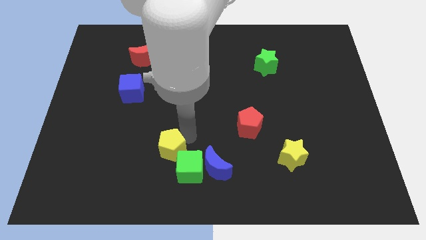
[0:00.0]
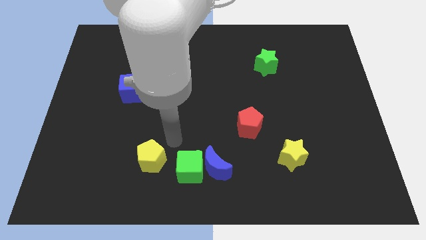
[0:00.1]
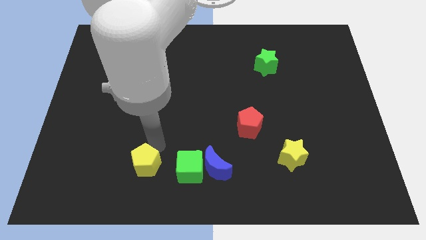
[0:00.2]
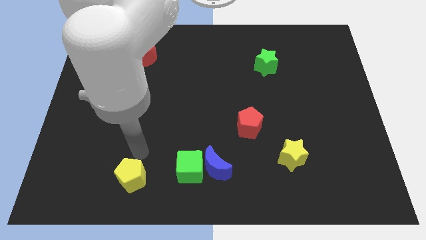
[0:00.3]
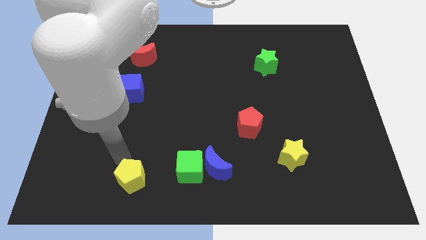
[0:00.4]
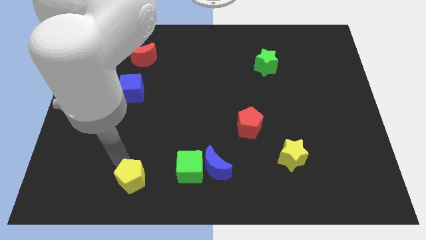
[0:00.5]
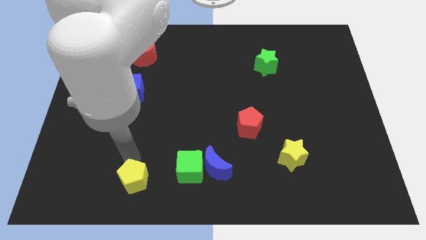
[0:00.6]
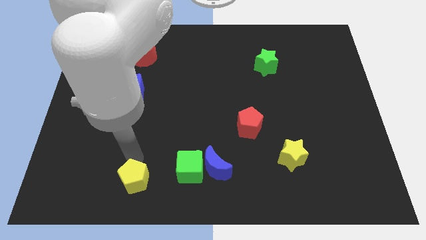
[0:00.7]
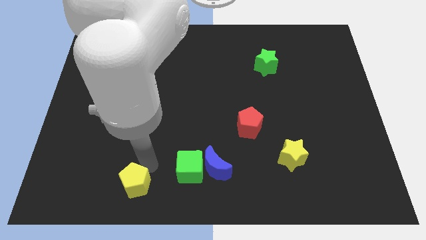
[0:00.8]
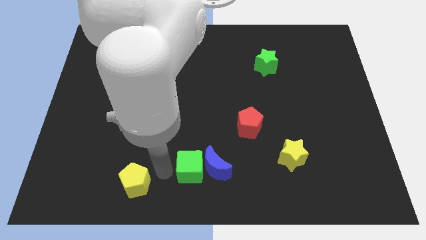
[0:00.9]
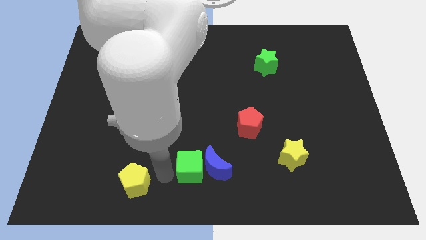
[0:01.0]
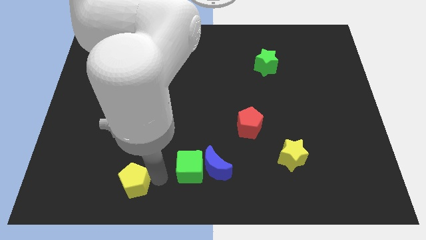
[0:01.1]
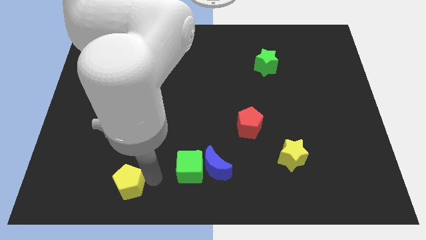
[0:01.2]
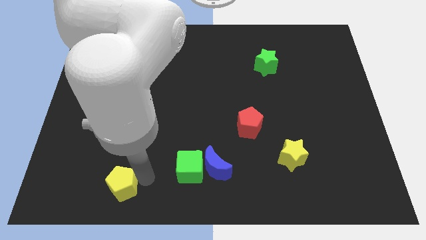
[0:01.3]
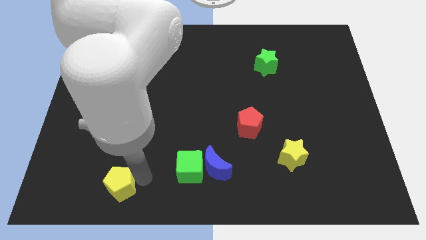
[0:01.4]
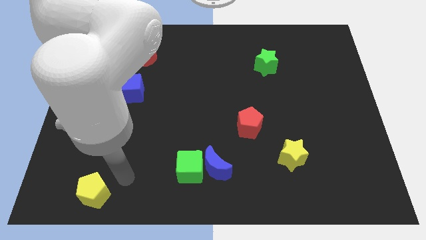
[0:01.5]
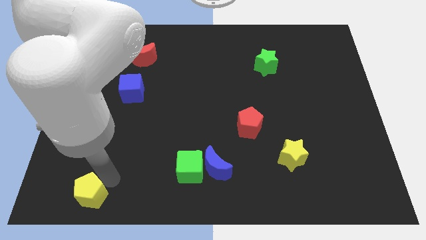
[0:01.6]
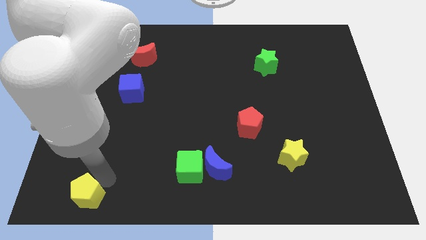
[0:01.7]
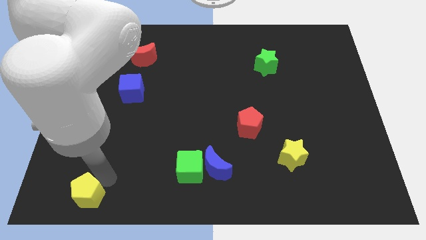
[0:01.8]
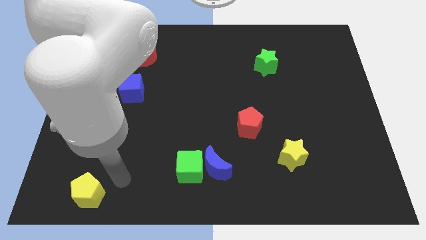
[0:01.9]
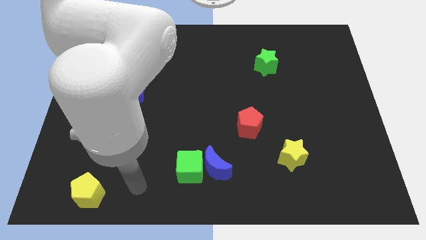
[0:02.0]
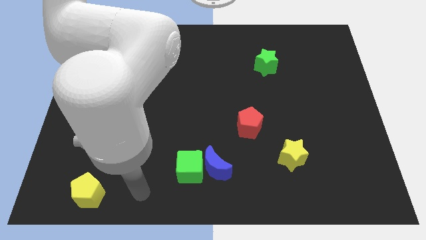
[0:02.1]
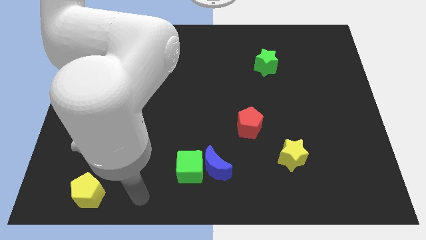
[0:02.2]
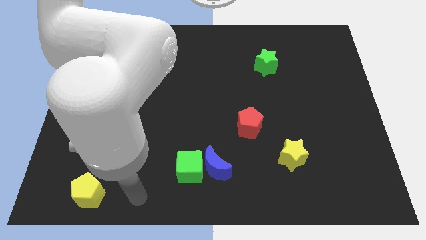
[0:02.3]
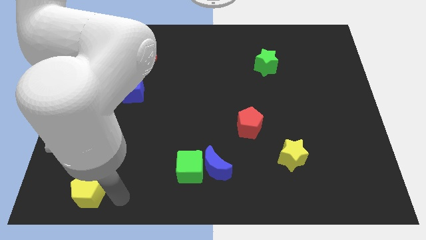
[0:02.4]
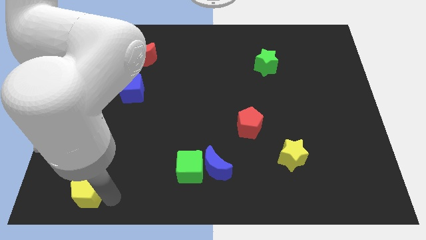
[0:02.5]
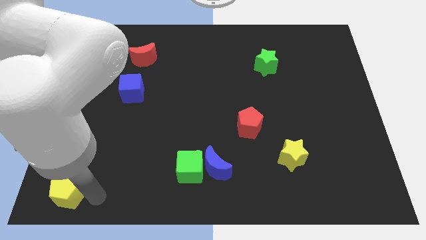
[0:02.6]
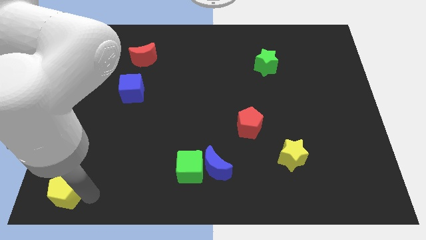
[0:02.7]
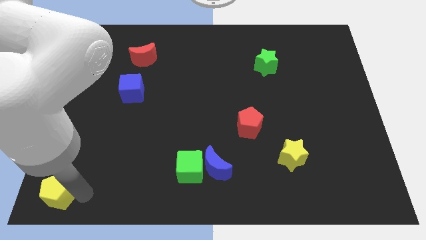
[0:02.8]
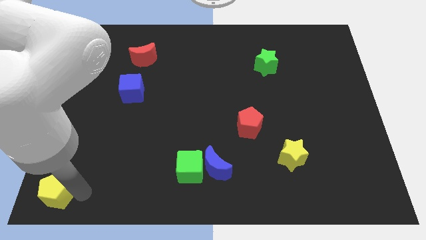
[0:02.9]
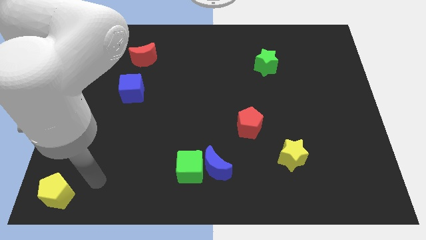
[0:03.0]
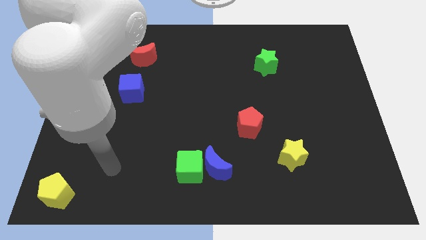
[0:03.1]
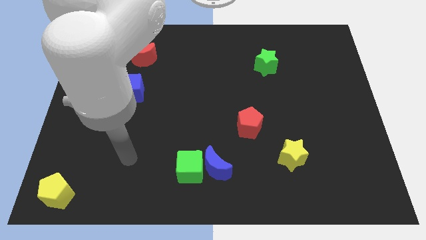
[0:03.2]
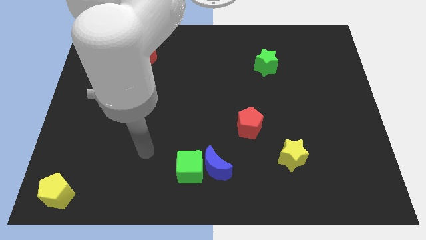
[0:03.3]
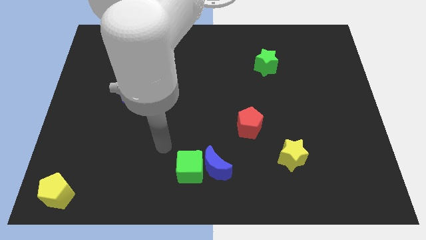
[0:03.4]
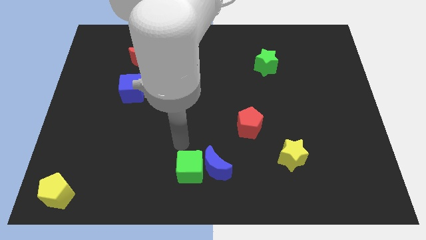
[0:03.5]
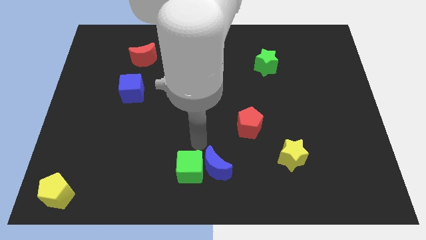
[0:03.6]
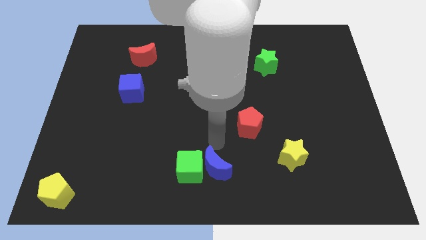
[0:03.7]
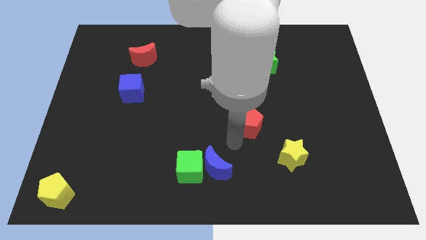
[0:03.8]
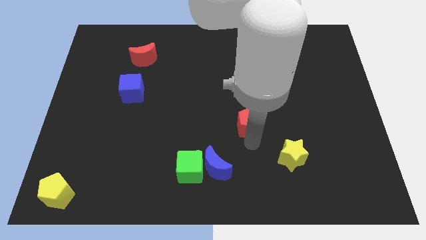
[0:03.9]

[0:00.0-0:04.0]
place the yellow pentagon at the bottom left side

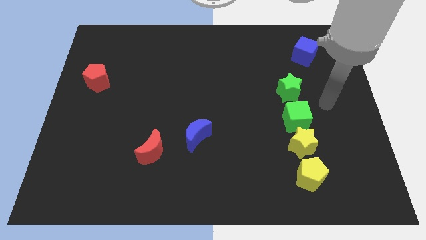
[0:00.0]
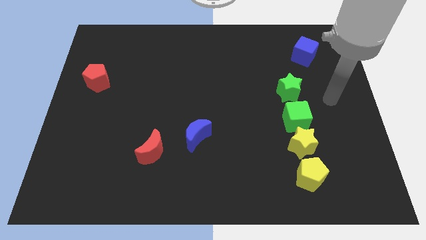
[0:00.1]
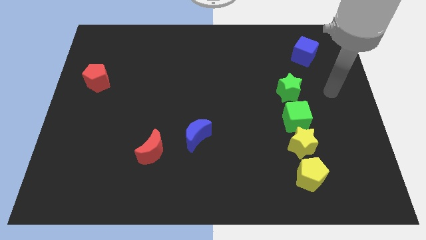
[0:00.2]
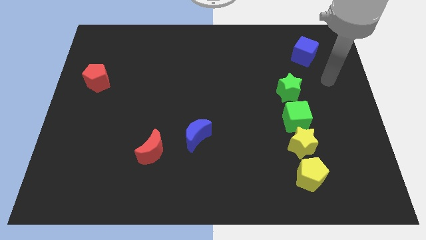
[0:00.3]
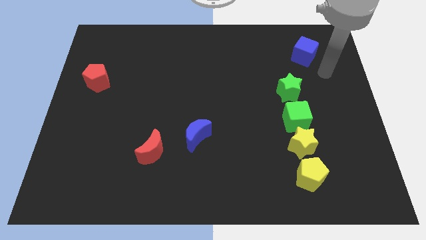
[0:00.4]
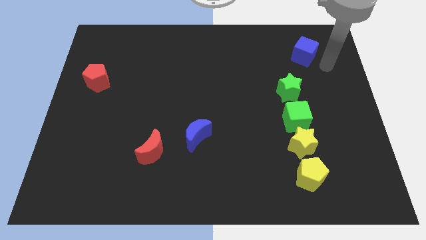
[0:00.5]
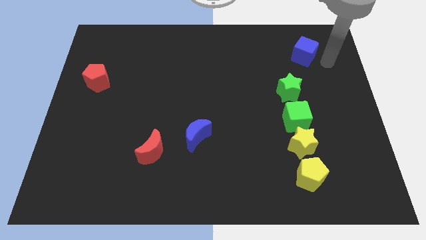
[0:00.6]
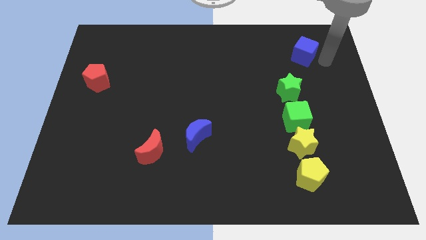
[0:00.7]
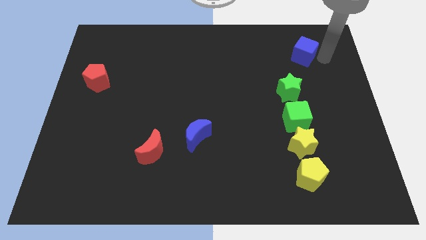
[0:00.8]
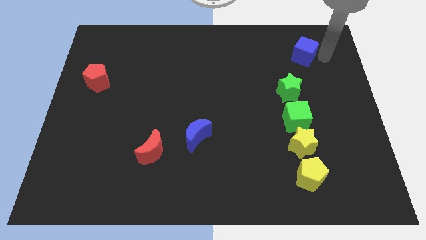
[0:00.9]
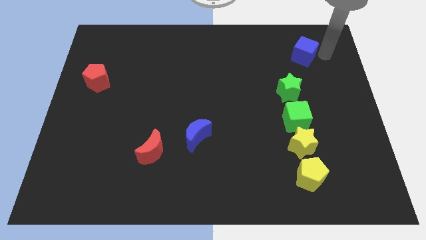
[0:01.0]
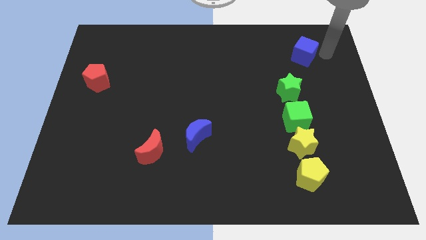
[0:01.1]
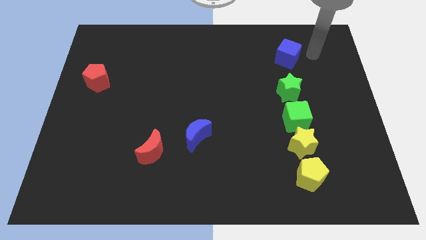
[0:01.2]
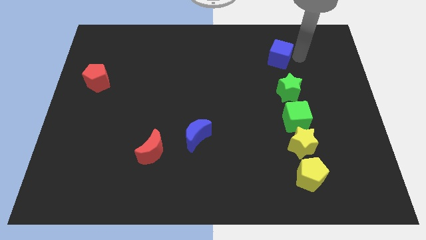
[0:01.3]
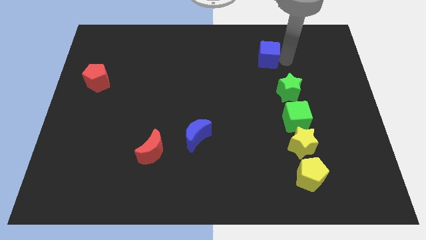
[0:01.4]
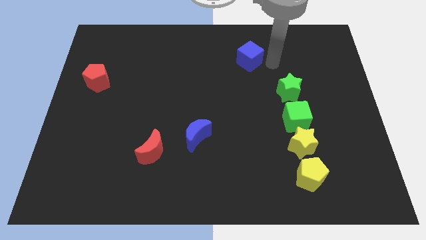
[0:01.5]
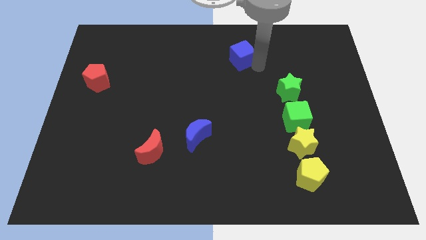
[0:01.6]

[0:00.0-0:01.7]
move the blue cube to the left side

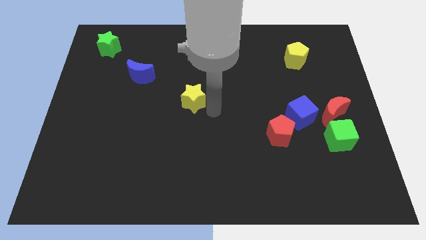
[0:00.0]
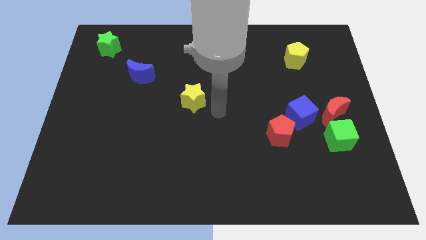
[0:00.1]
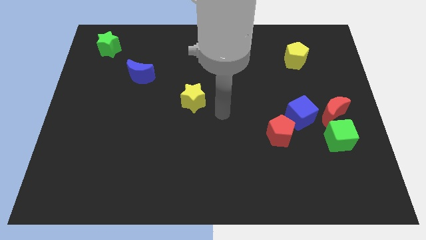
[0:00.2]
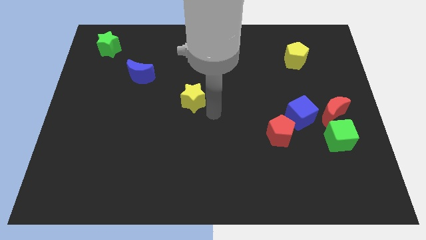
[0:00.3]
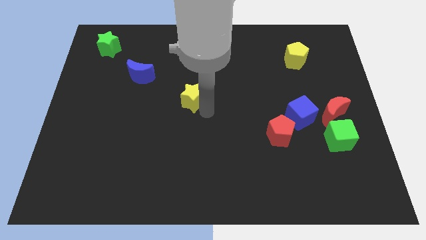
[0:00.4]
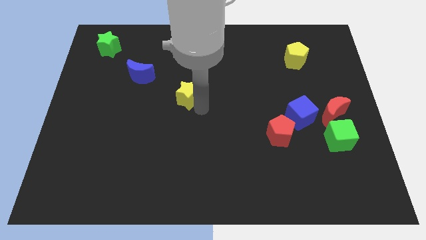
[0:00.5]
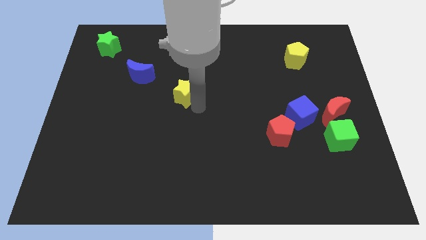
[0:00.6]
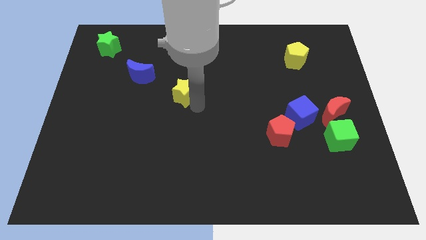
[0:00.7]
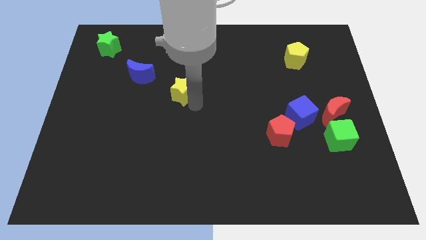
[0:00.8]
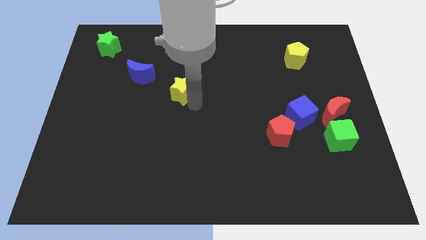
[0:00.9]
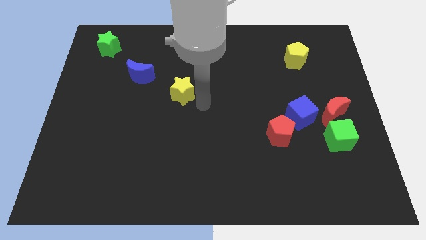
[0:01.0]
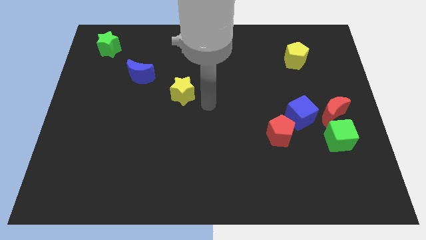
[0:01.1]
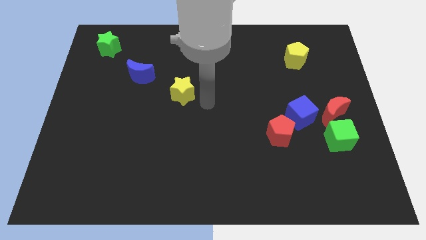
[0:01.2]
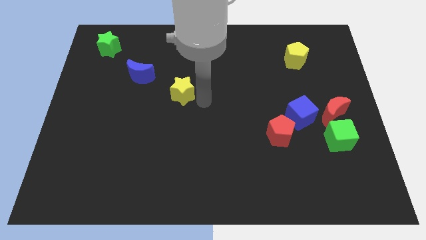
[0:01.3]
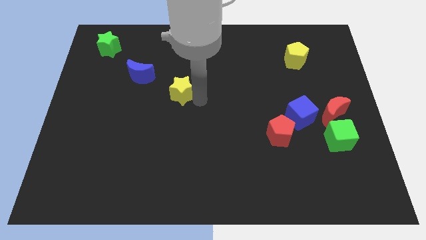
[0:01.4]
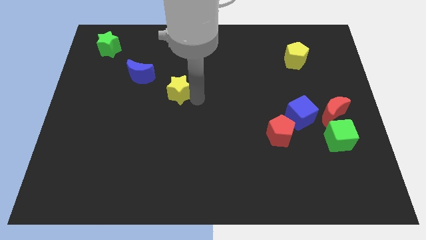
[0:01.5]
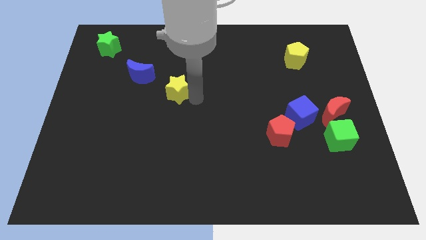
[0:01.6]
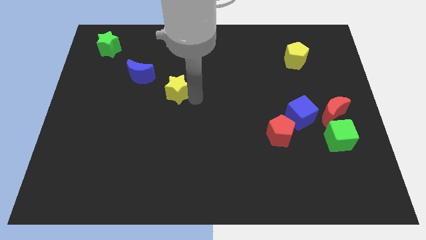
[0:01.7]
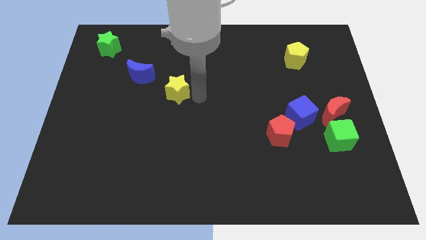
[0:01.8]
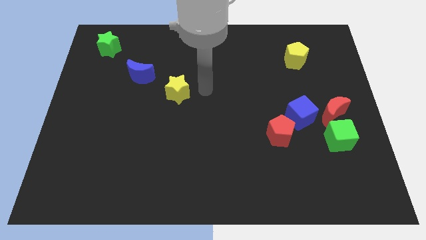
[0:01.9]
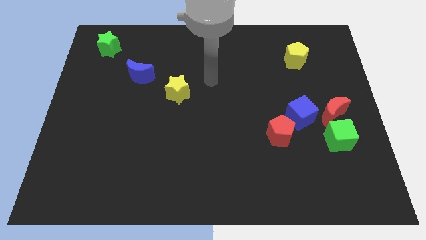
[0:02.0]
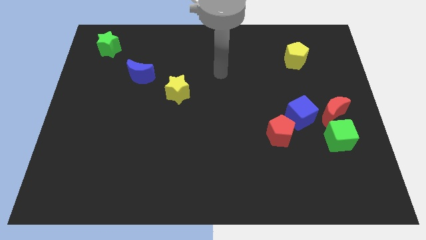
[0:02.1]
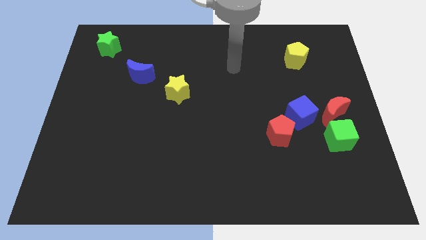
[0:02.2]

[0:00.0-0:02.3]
adjust the yellow star diagonal to blue moon

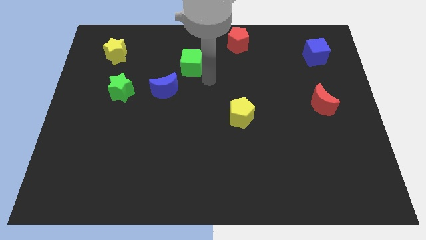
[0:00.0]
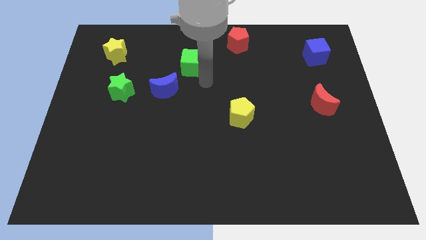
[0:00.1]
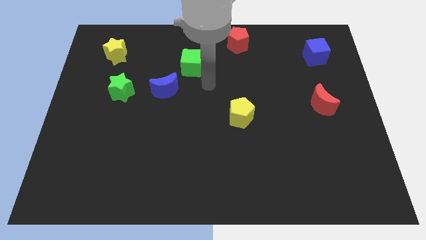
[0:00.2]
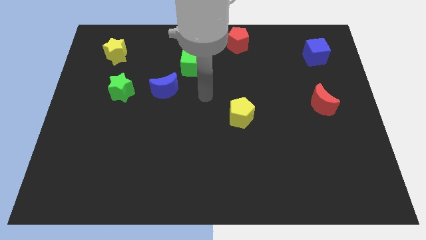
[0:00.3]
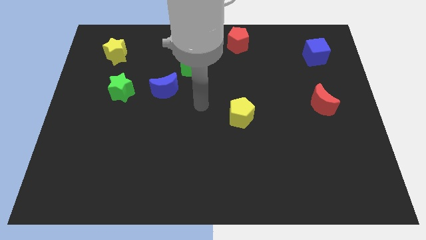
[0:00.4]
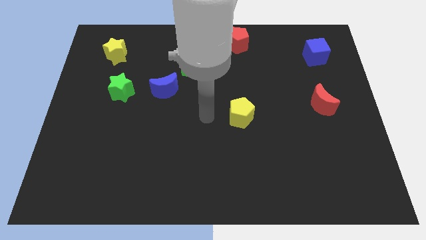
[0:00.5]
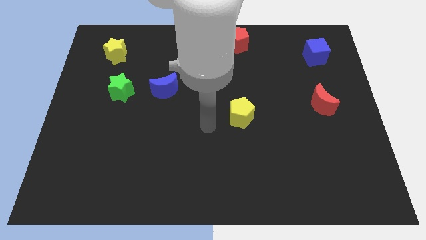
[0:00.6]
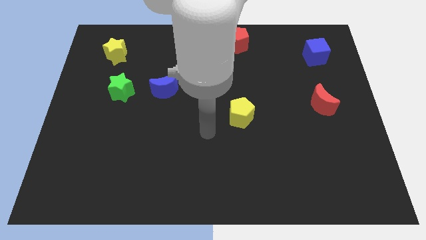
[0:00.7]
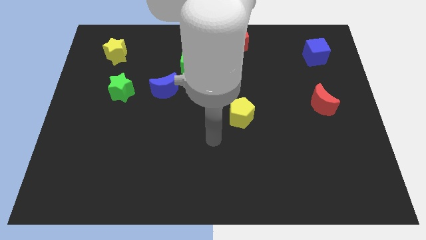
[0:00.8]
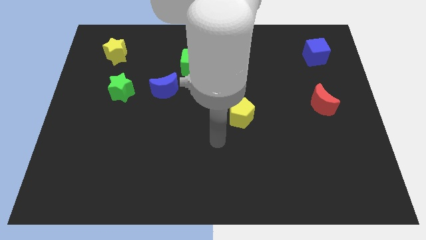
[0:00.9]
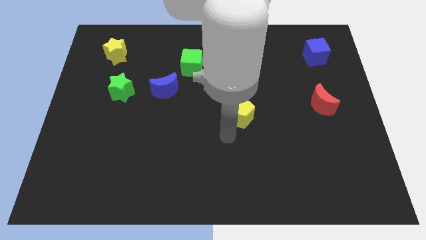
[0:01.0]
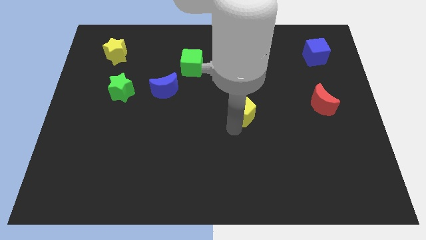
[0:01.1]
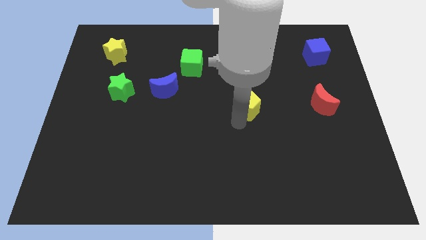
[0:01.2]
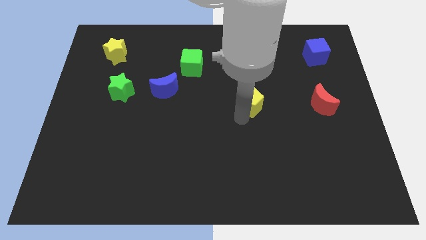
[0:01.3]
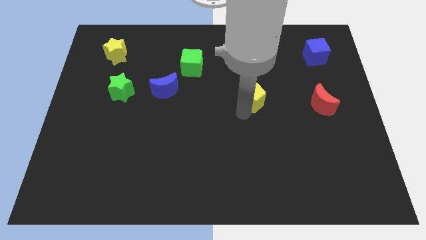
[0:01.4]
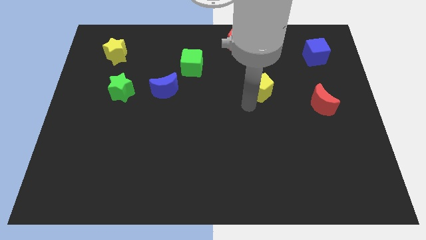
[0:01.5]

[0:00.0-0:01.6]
slide the yellow pentagon horizontally to the left side of the red moon
